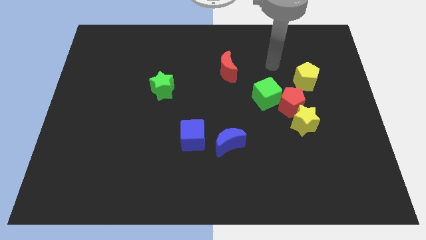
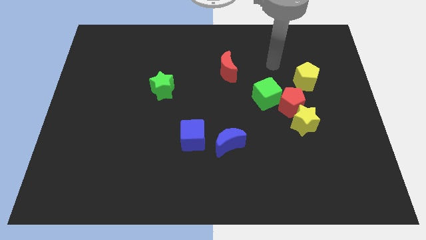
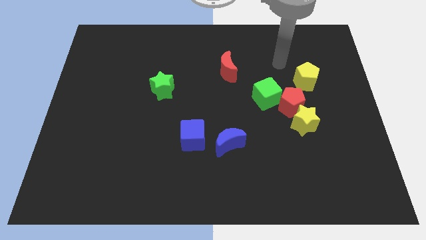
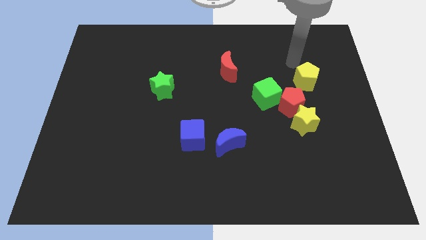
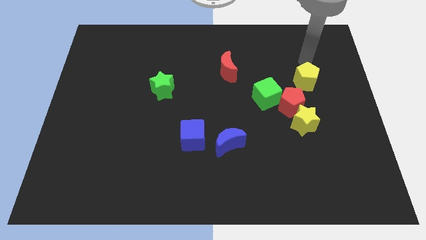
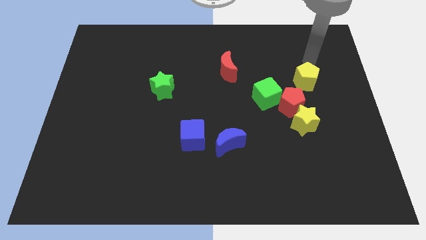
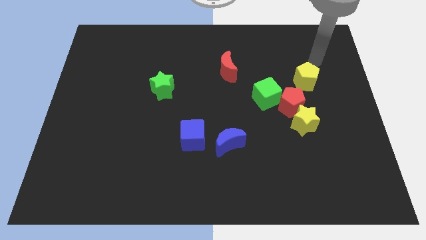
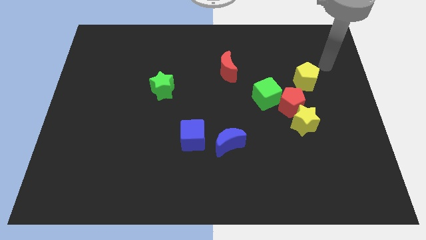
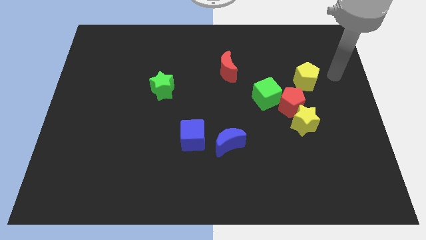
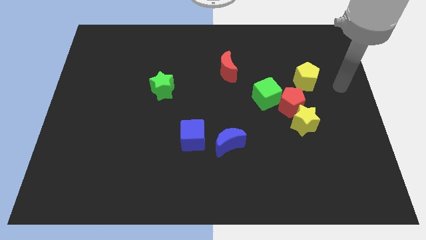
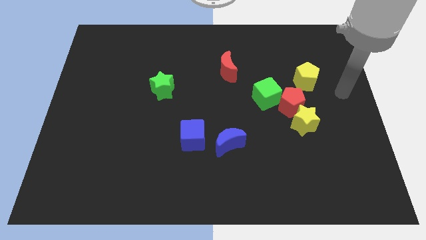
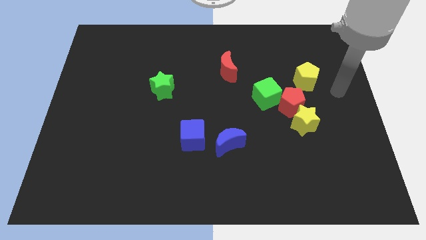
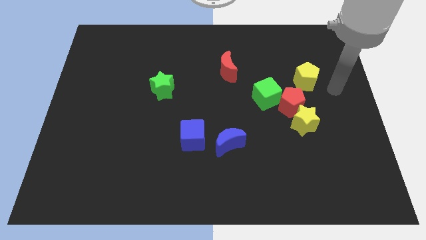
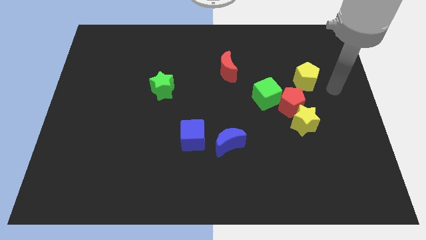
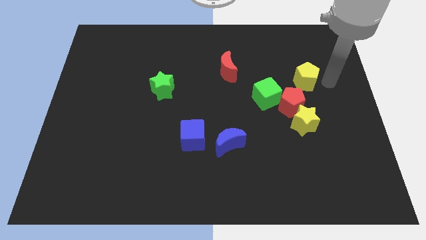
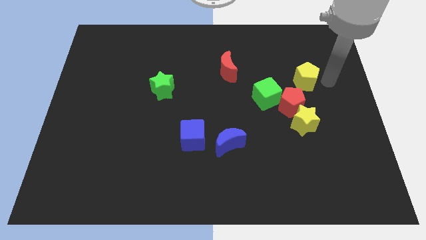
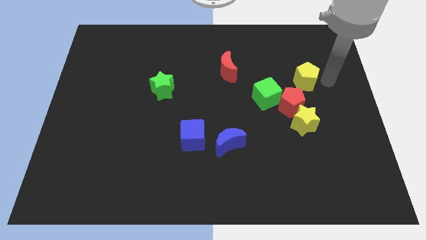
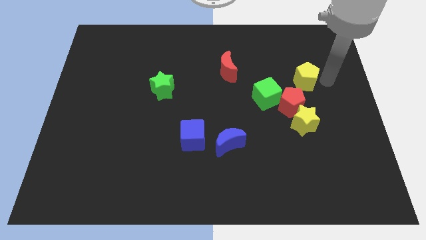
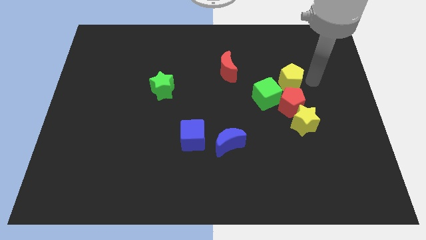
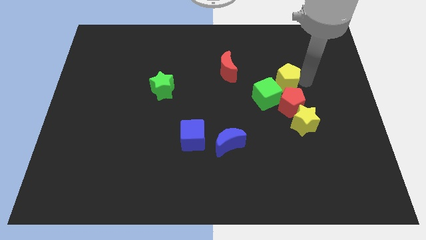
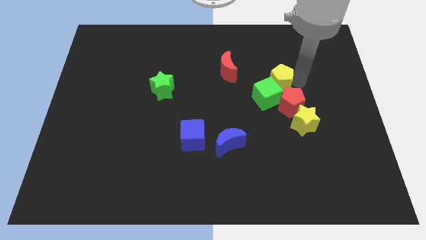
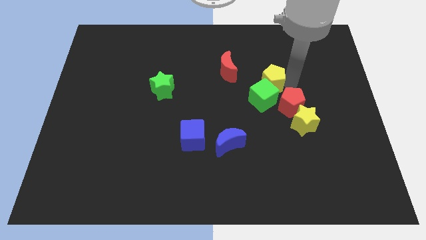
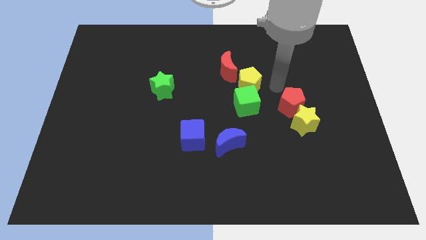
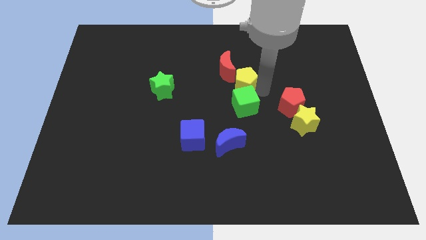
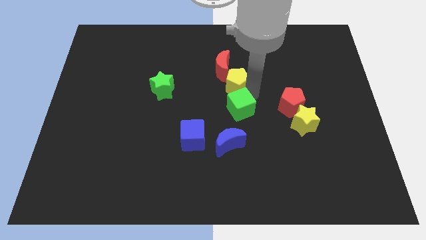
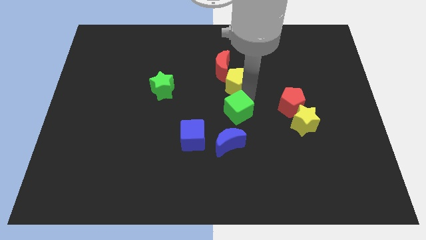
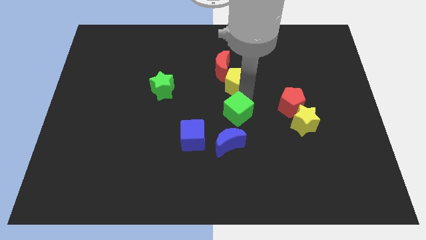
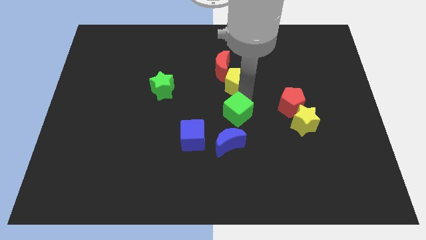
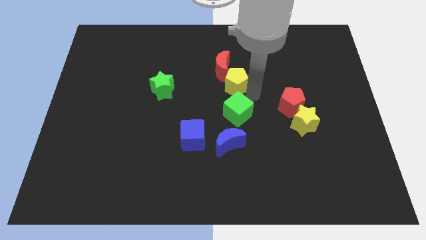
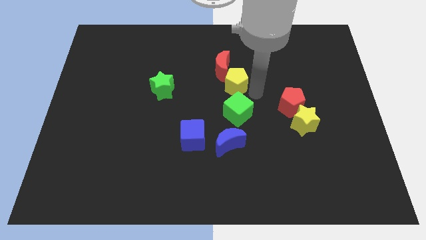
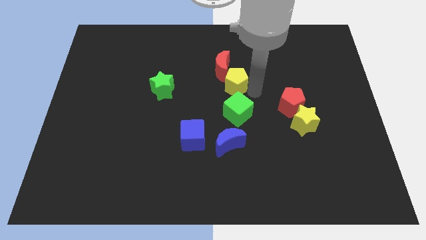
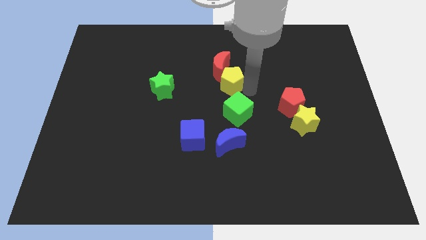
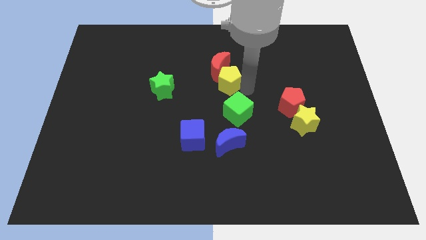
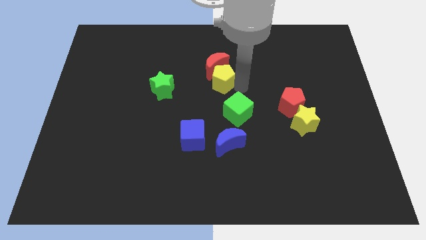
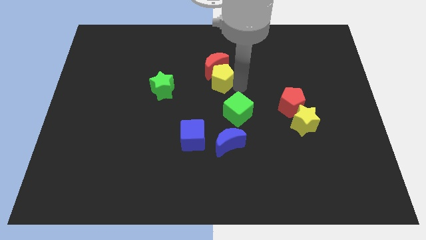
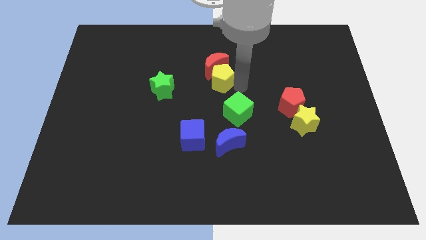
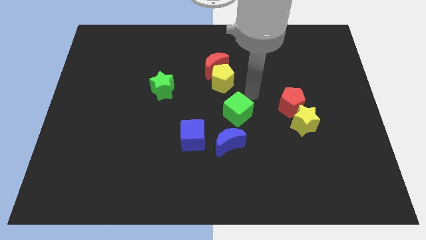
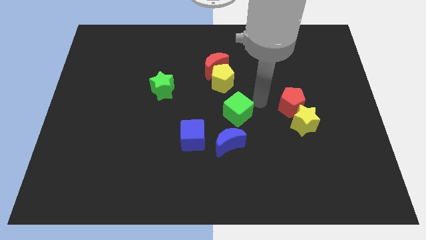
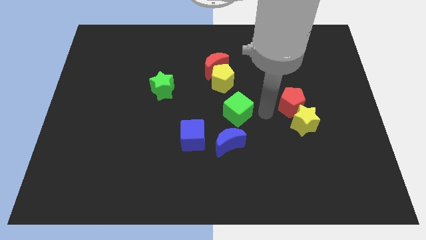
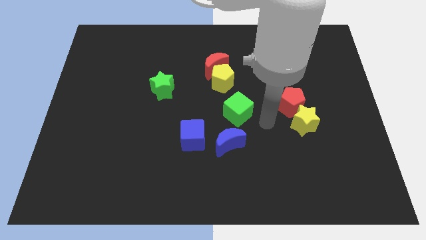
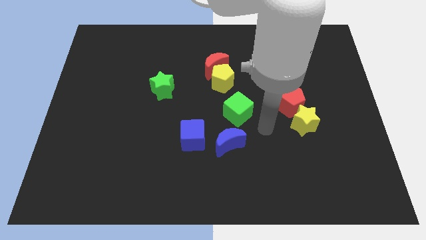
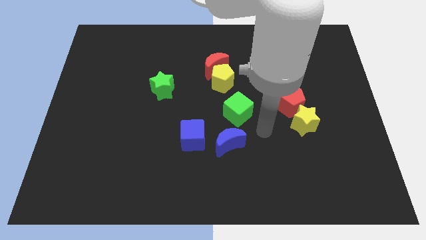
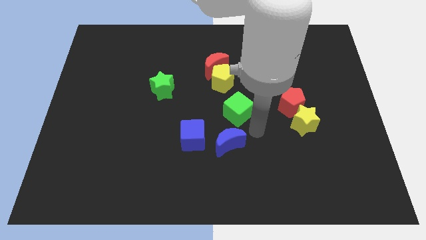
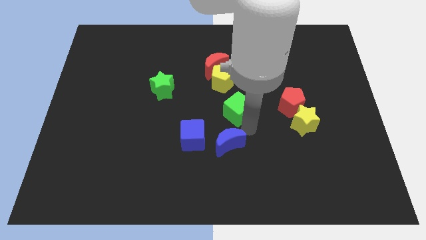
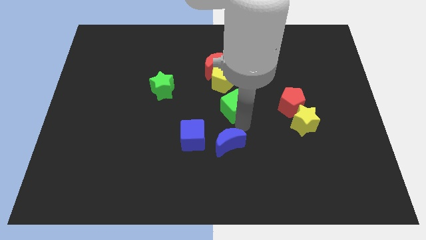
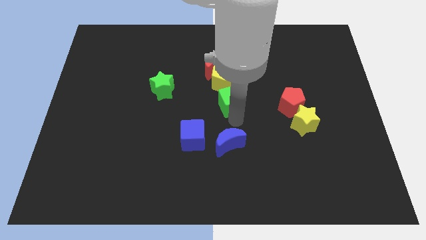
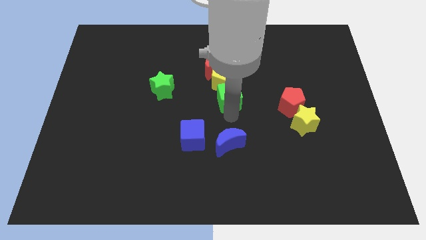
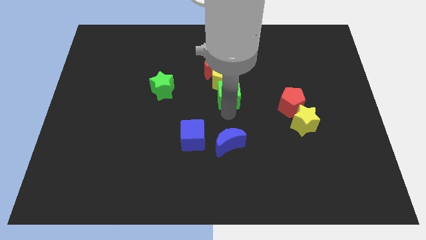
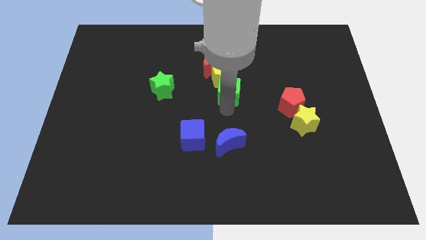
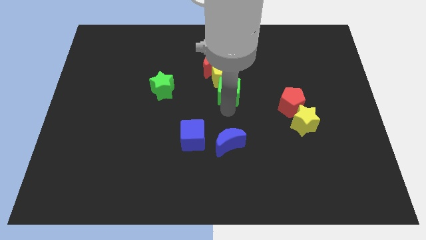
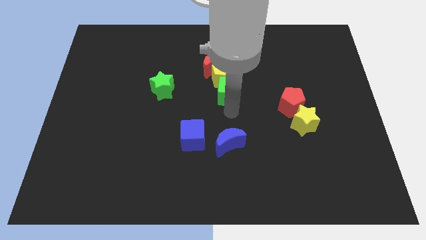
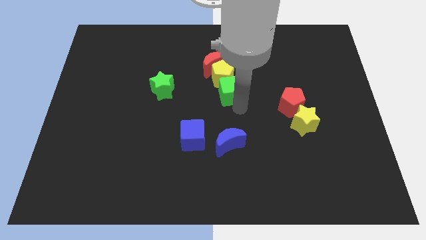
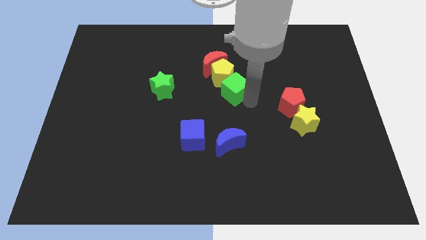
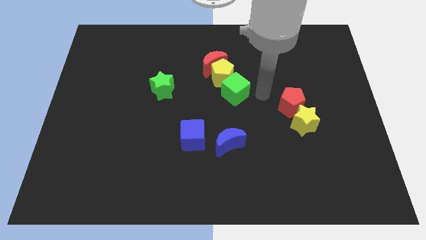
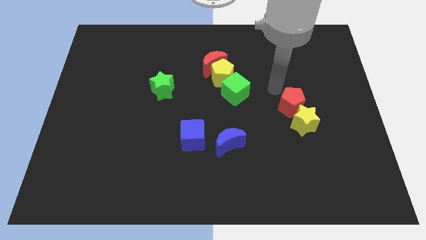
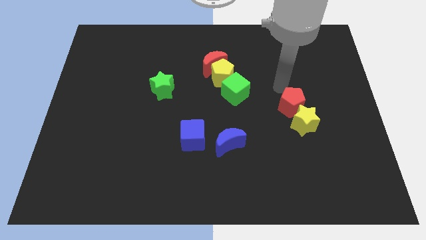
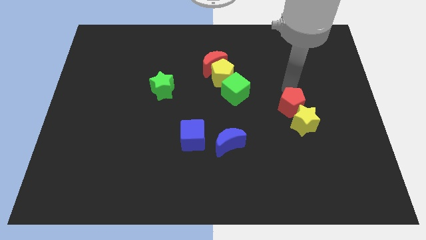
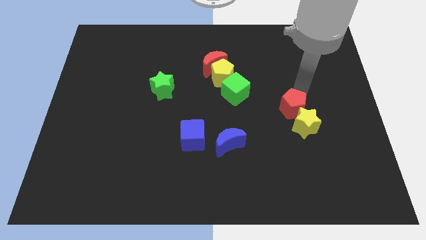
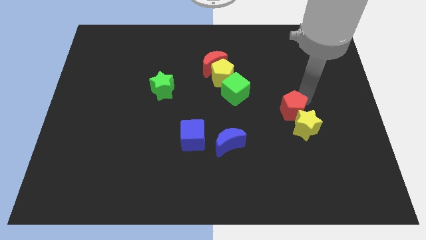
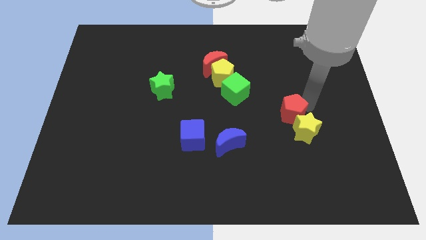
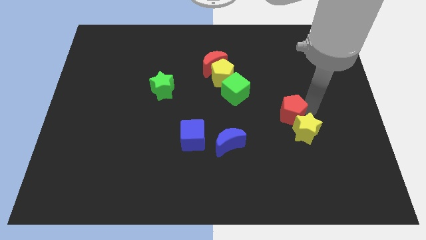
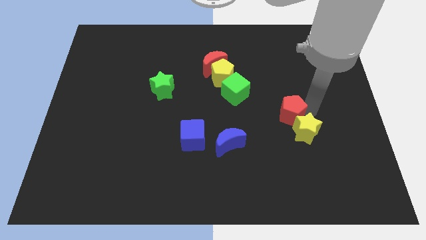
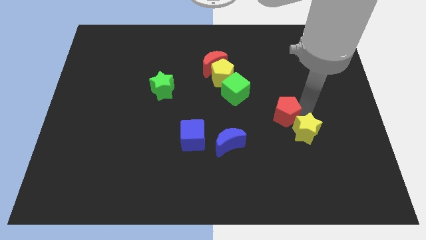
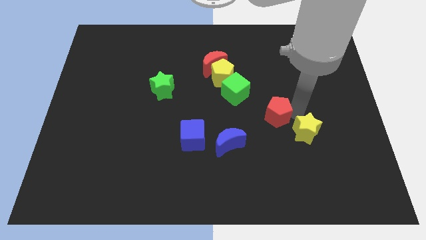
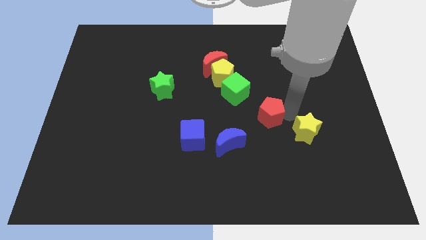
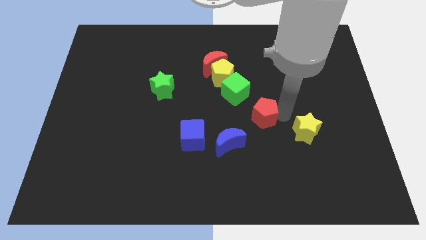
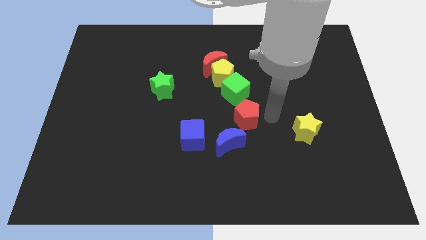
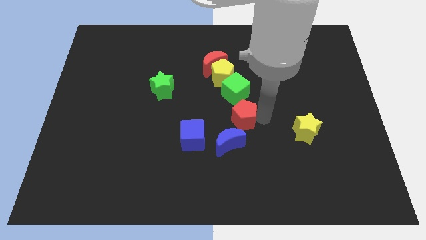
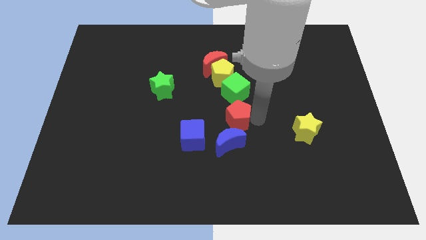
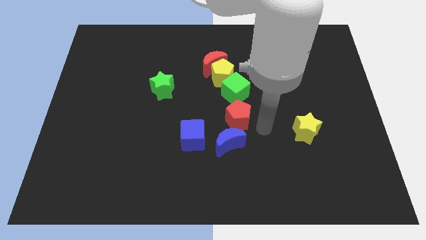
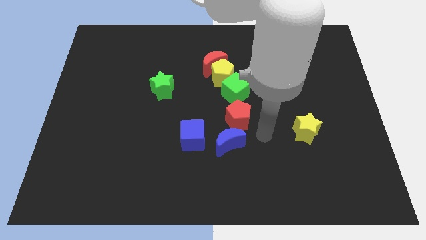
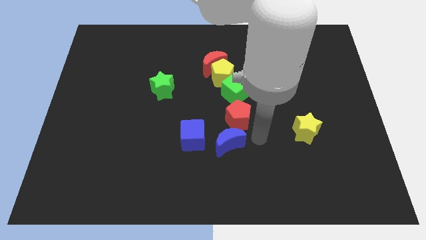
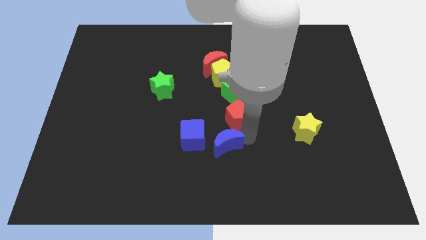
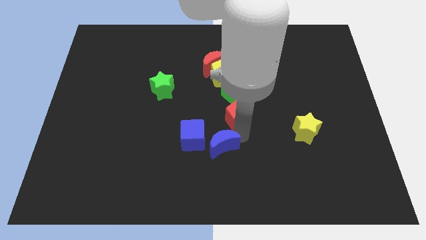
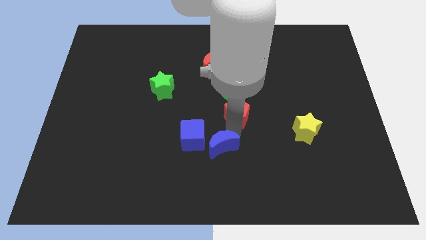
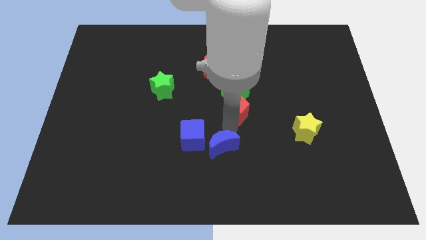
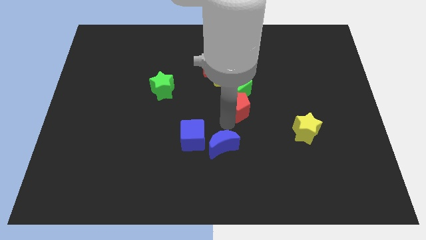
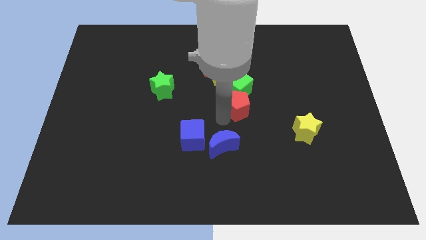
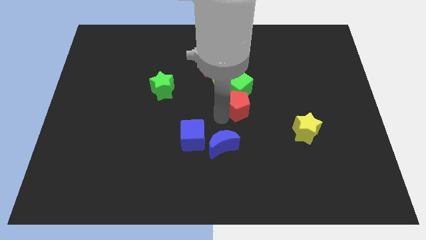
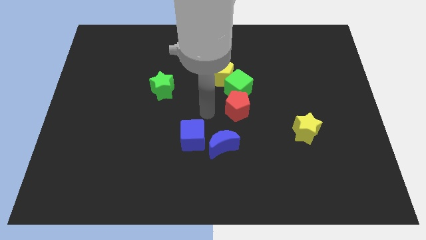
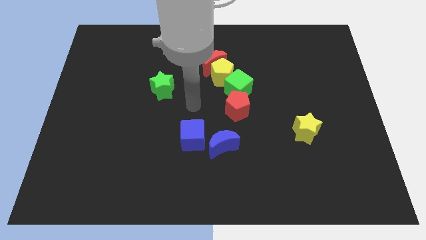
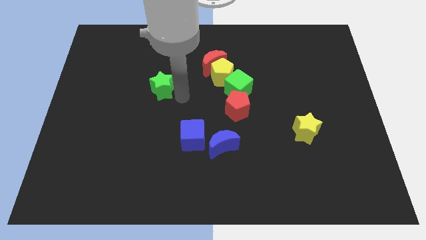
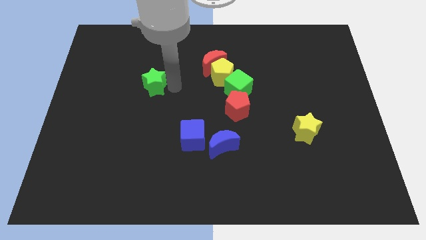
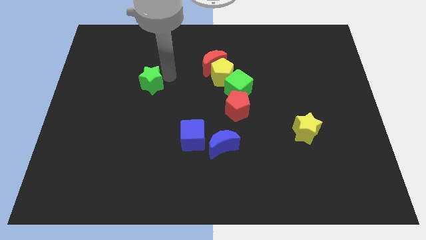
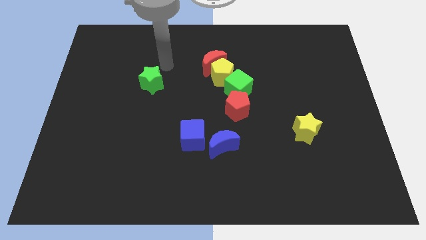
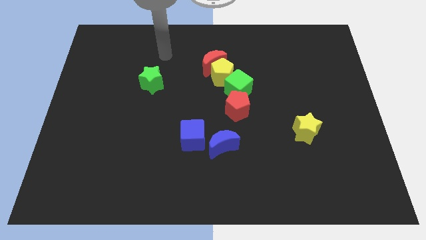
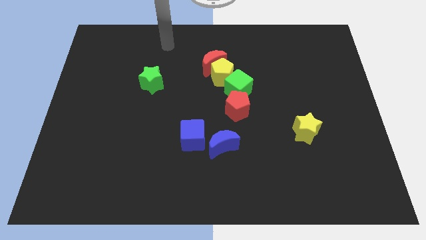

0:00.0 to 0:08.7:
form a row with red moon yellow pentagon green cube and red pentagon

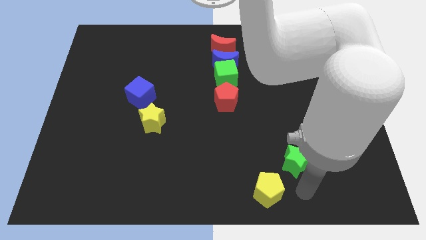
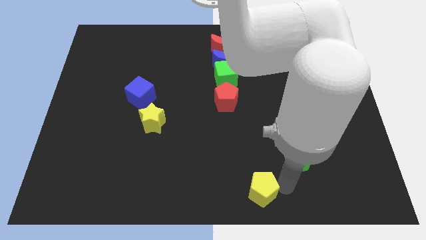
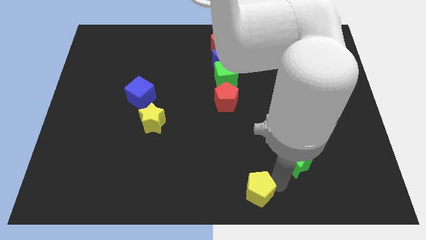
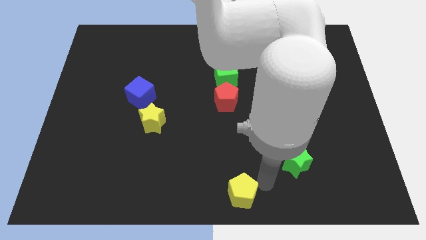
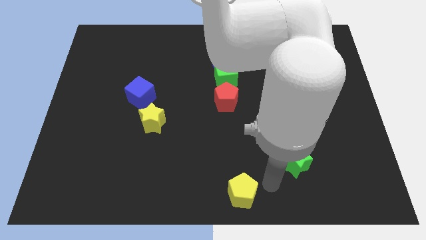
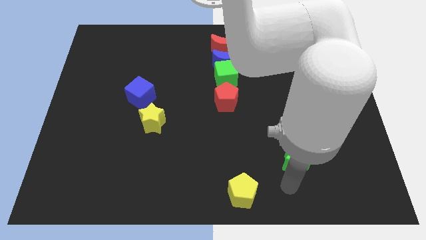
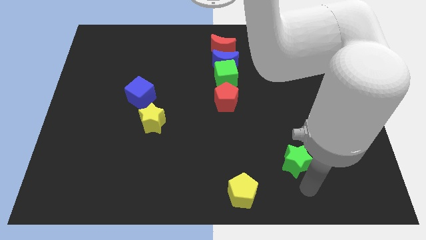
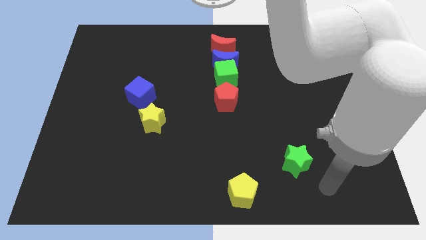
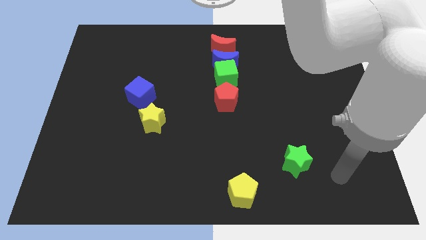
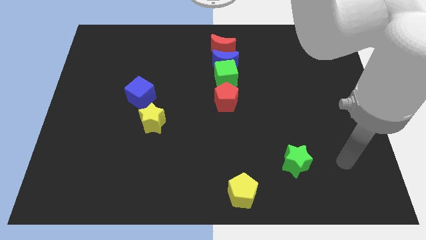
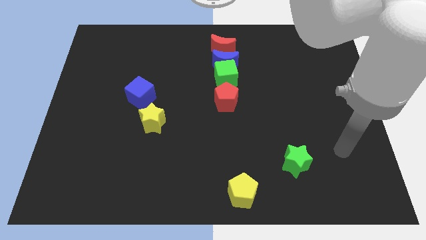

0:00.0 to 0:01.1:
place the yellow pentagon at the bottom center of the board
